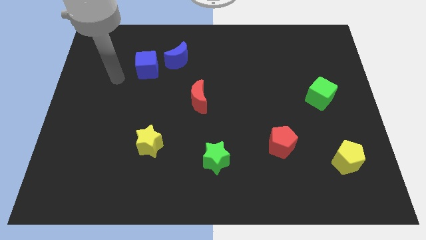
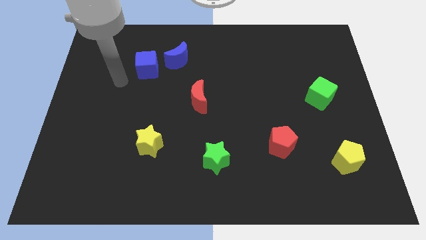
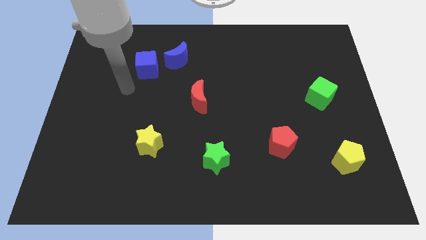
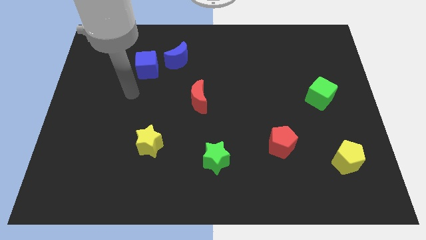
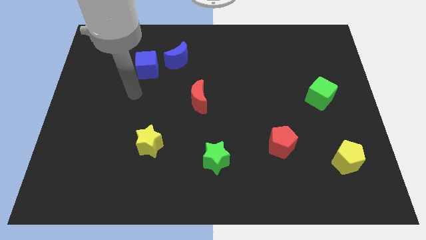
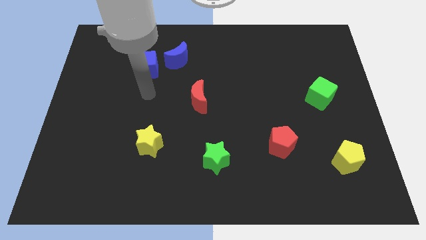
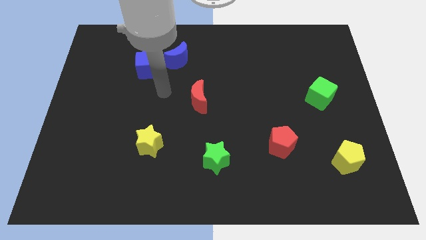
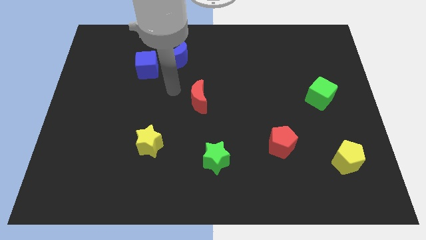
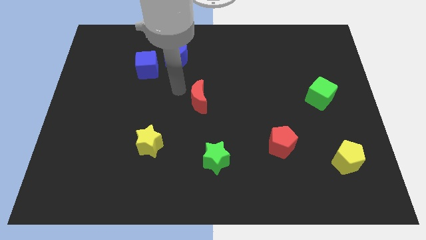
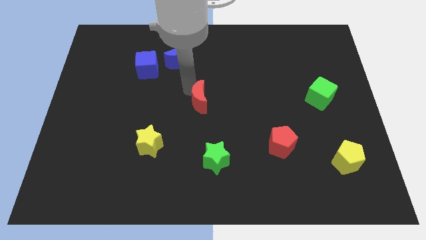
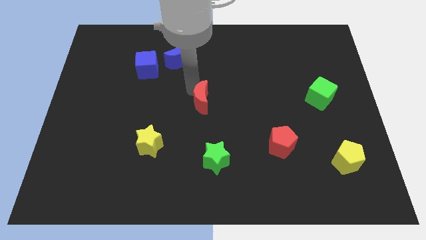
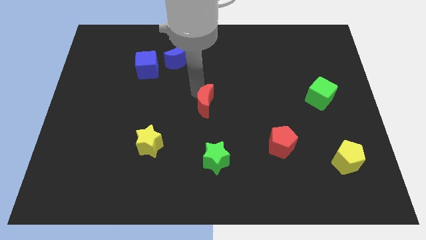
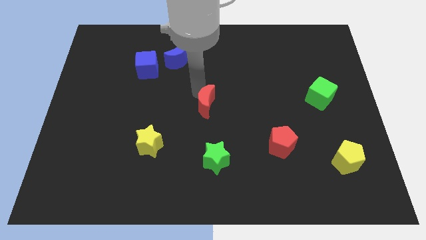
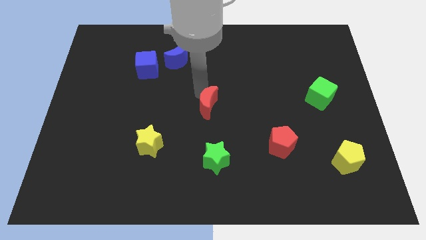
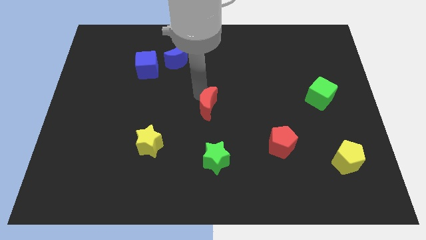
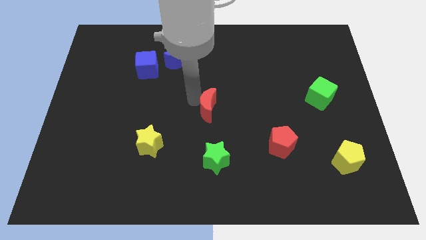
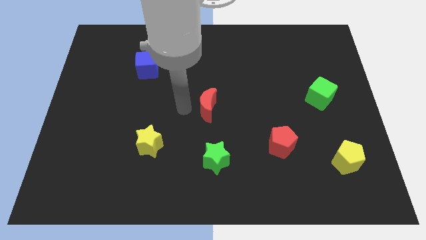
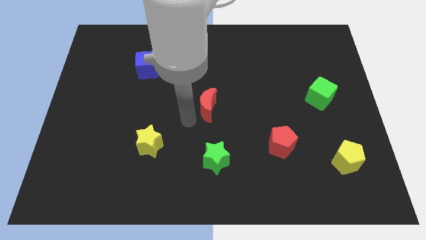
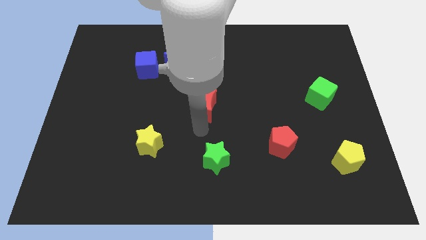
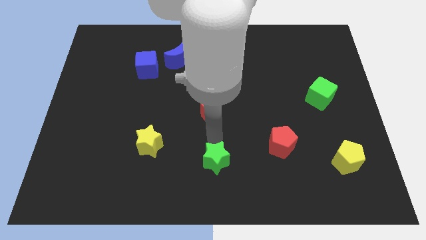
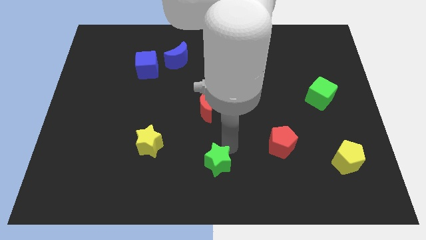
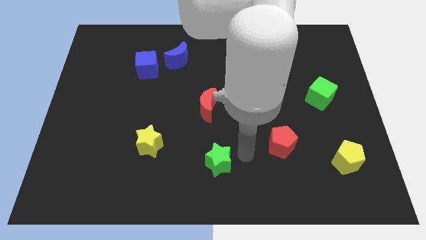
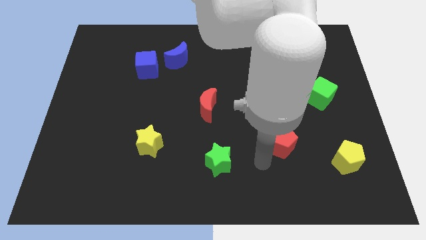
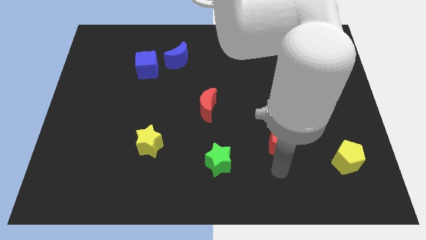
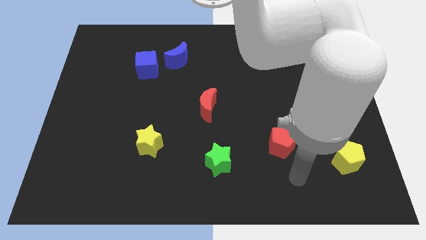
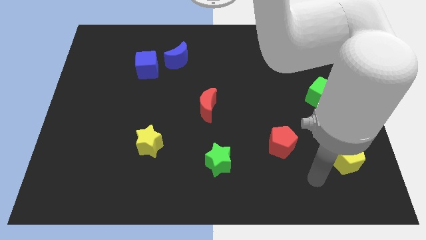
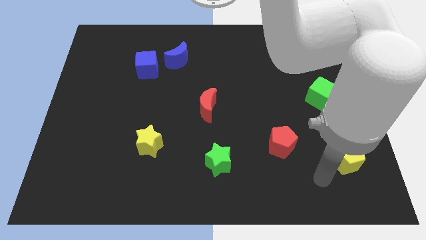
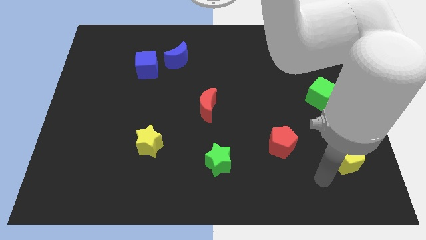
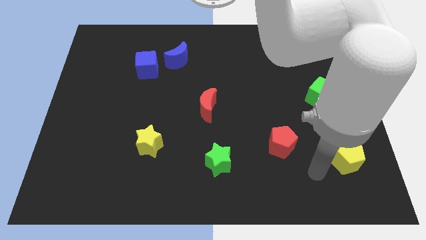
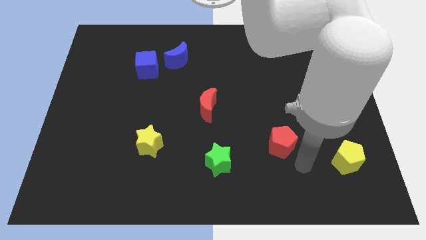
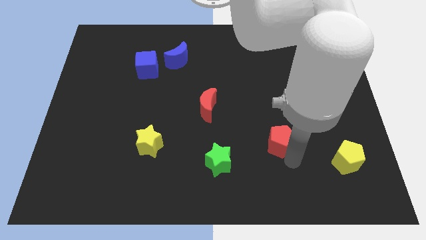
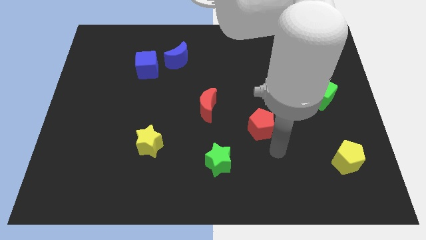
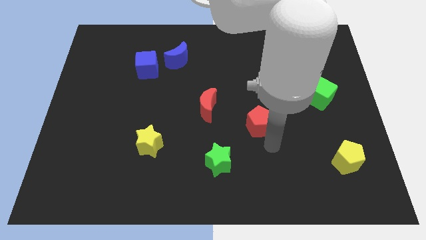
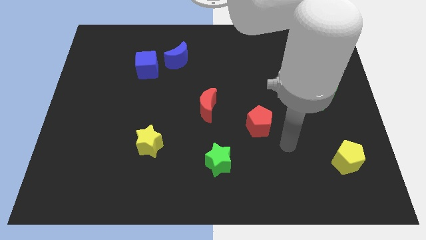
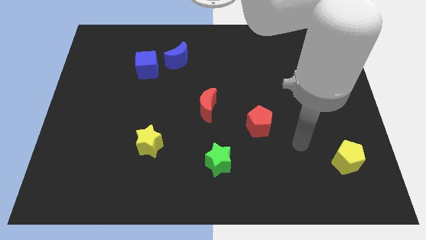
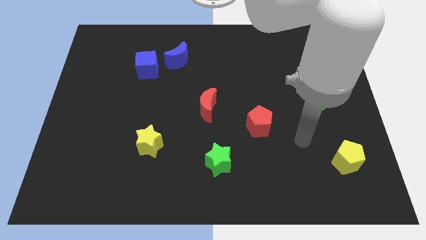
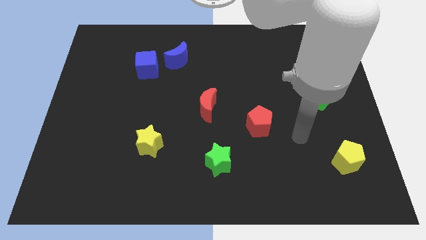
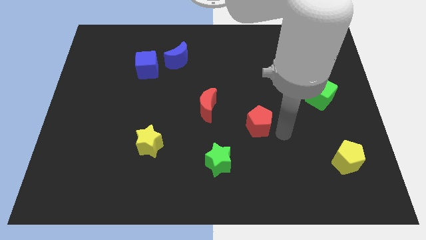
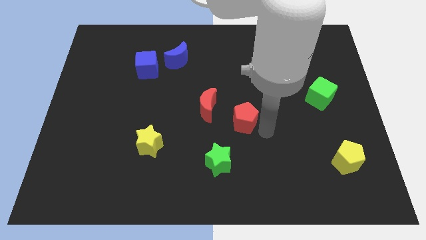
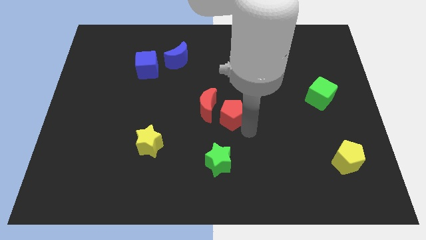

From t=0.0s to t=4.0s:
place red pentagon to the right of red moon

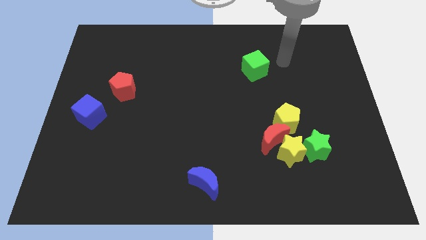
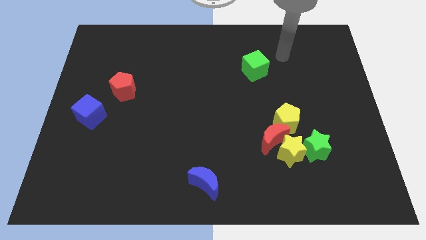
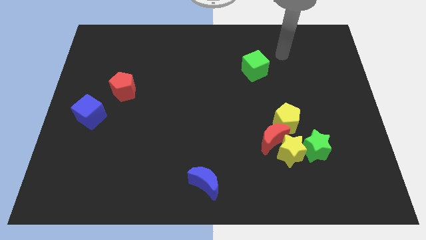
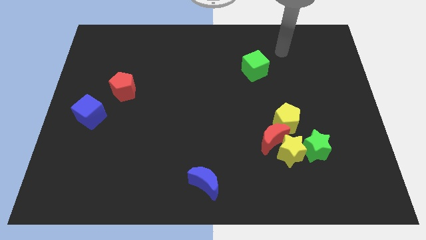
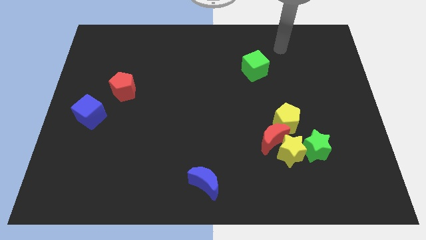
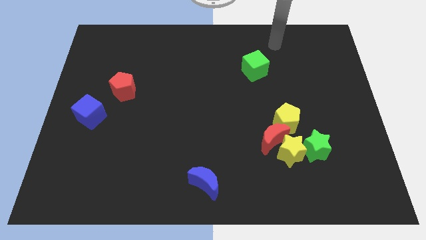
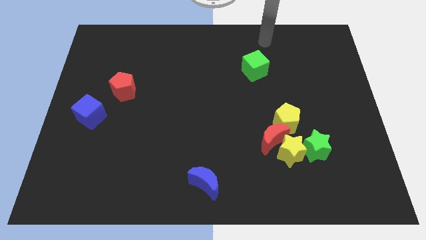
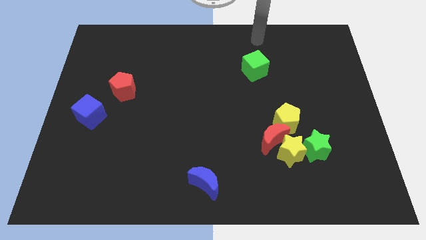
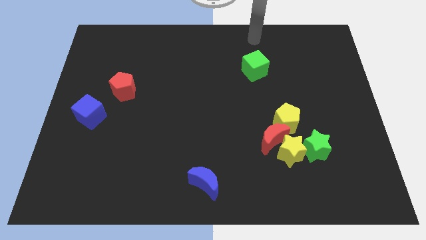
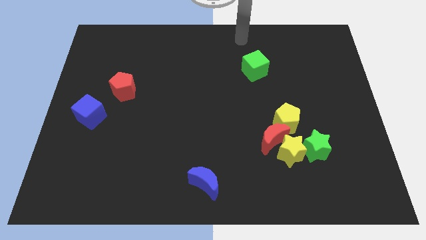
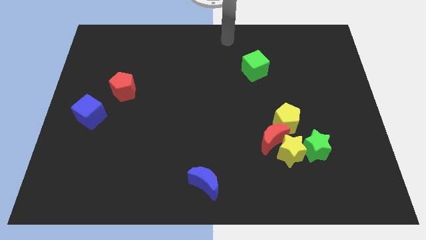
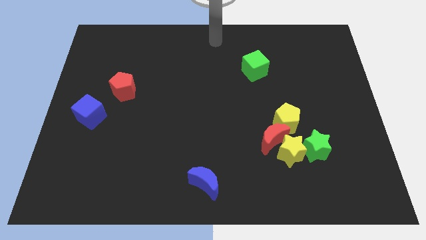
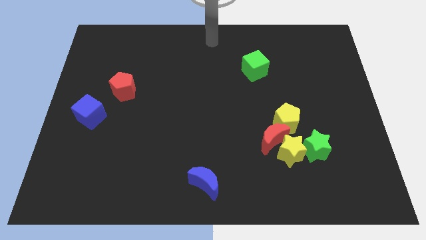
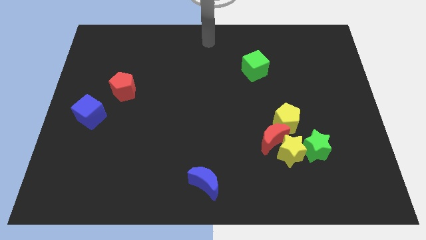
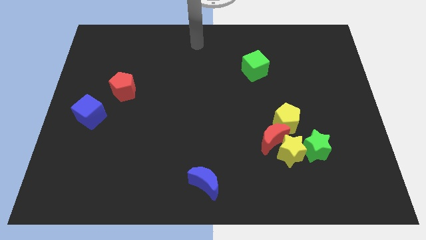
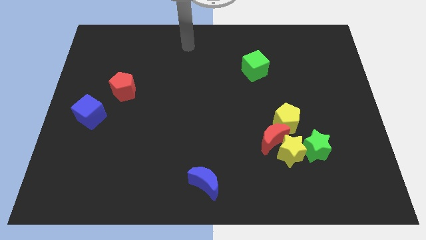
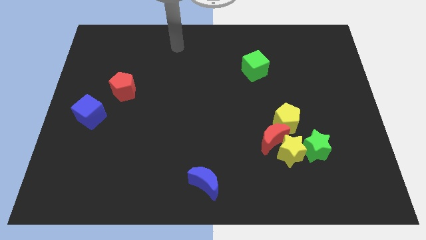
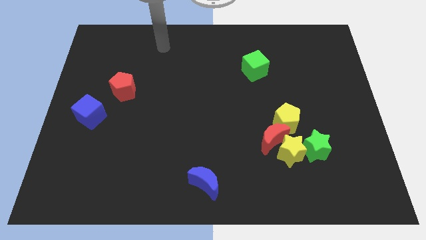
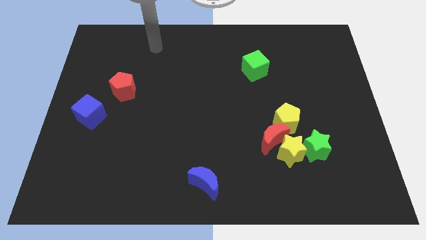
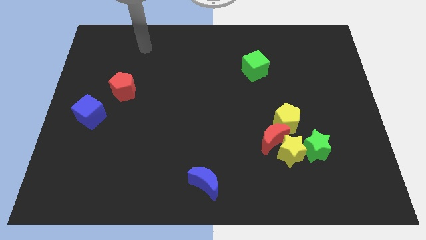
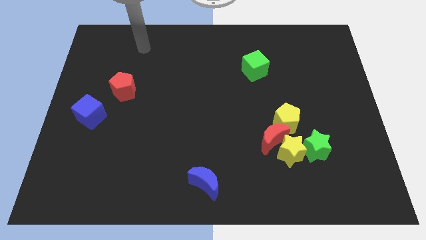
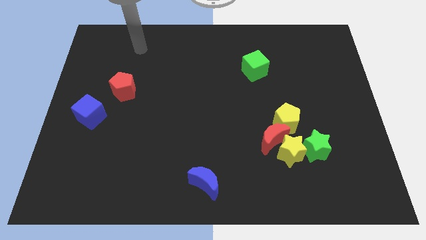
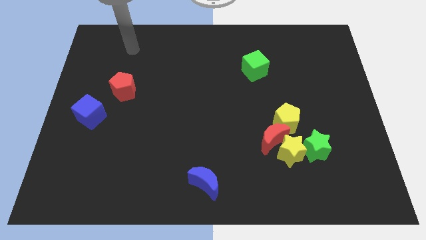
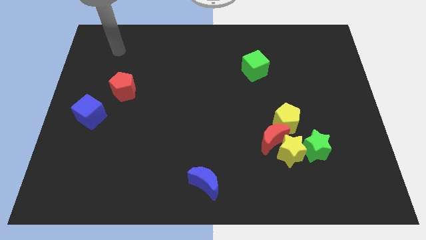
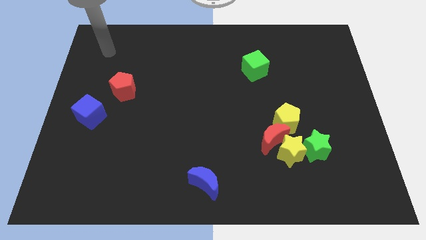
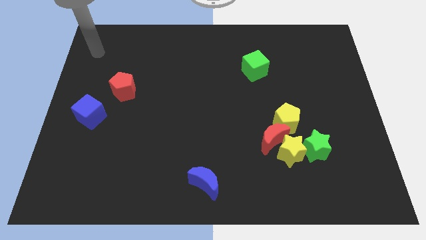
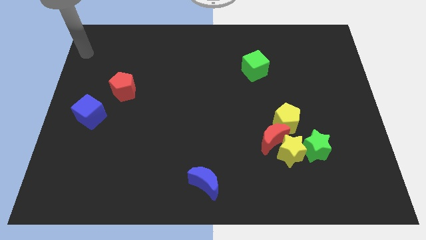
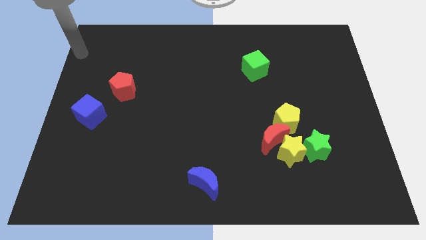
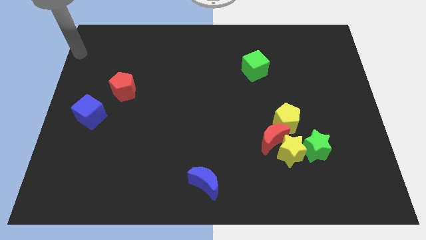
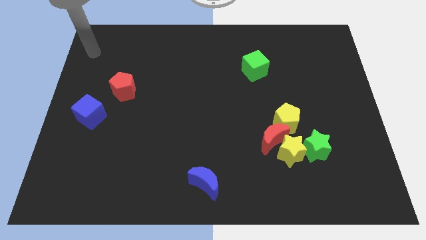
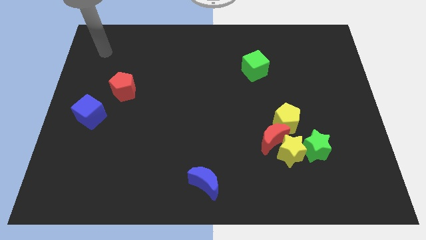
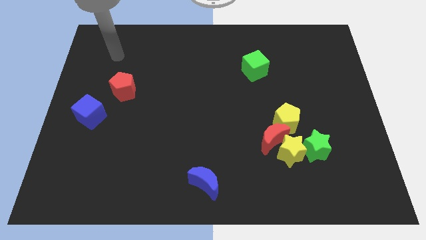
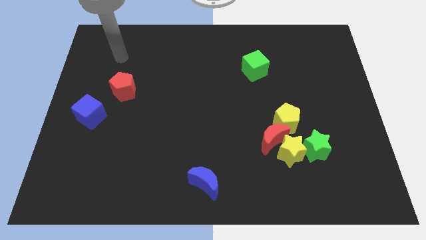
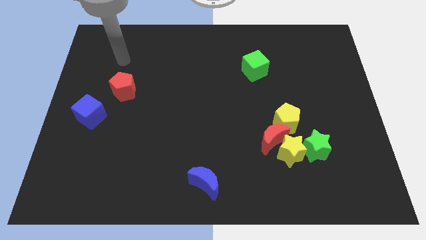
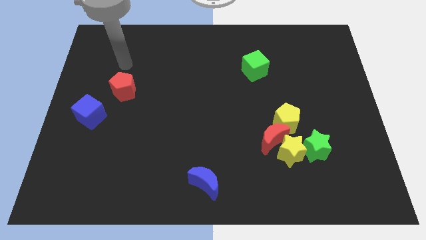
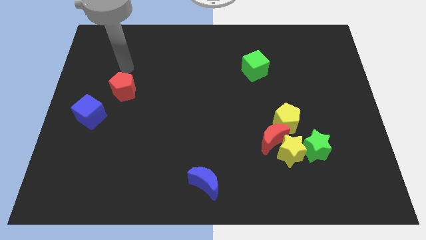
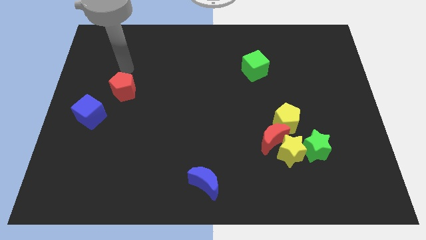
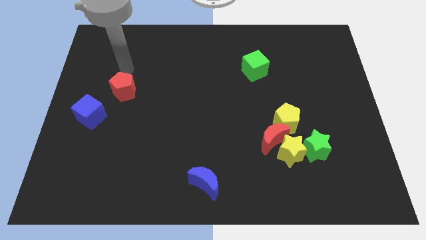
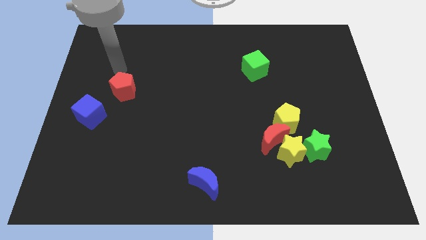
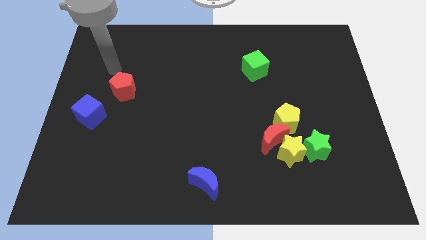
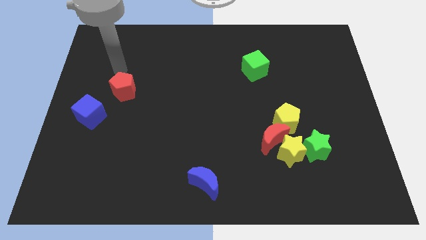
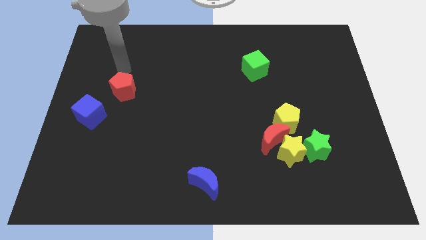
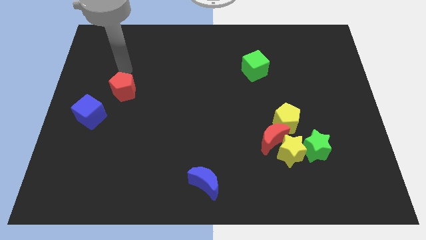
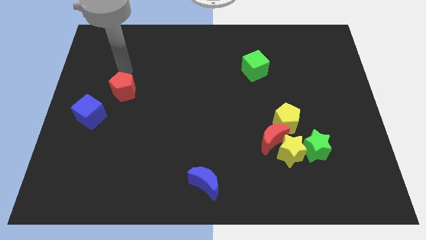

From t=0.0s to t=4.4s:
move arm near red pentagon

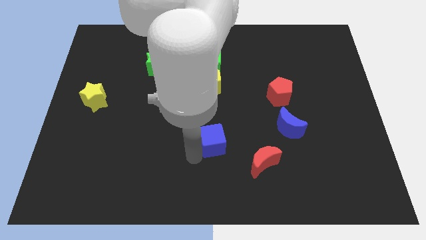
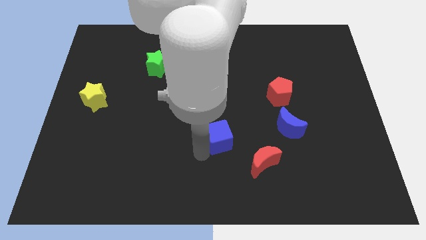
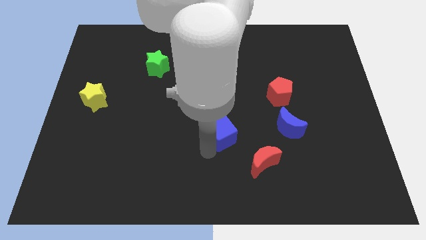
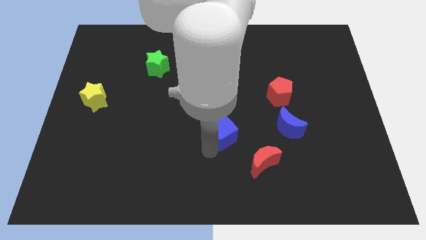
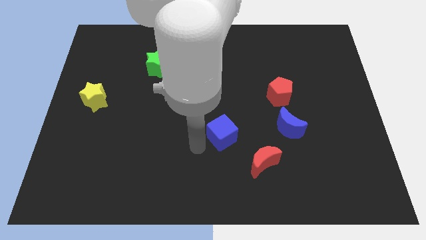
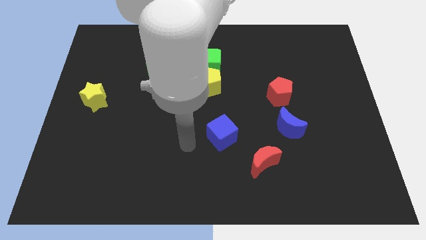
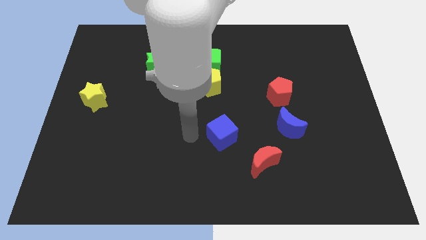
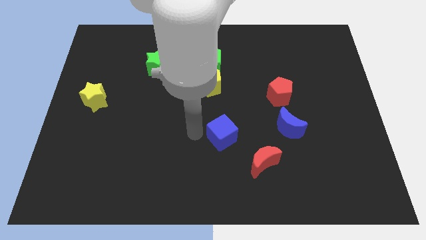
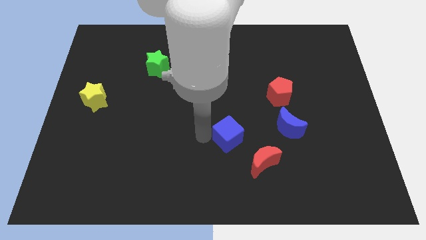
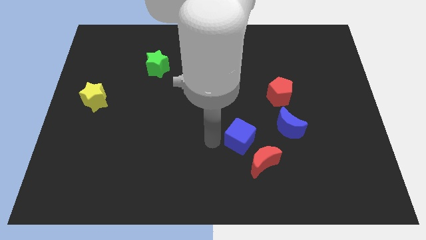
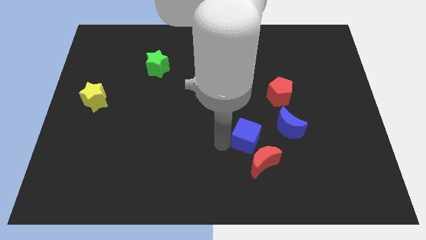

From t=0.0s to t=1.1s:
move the blue cube towards the blue moon
